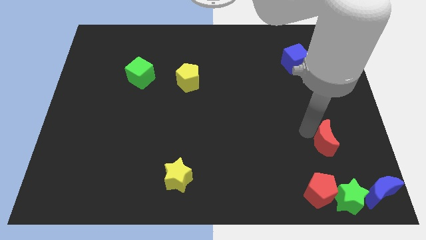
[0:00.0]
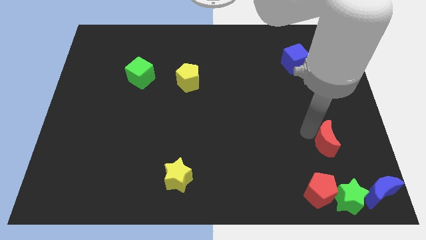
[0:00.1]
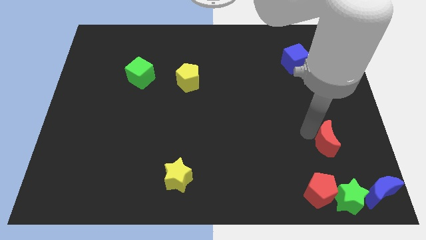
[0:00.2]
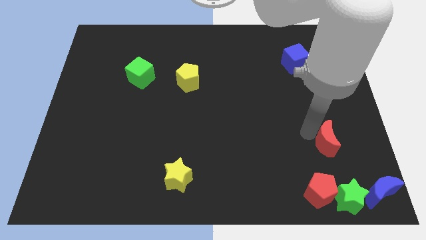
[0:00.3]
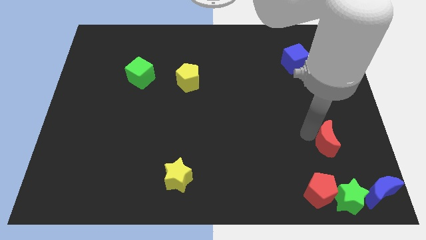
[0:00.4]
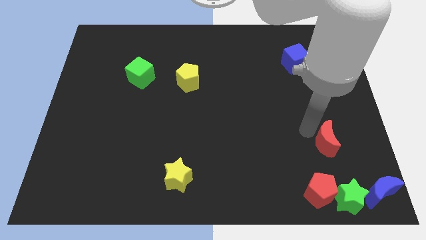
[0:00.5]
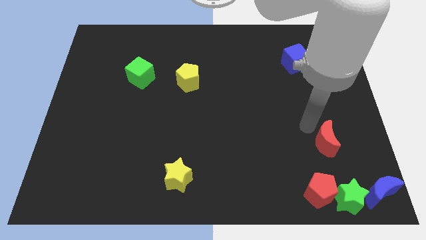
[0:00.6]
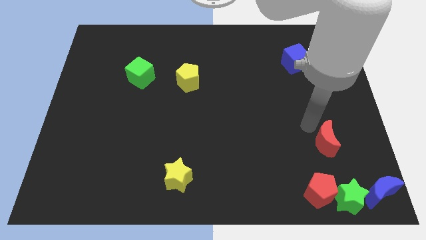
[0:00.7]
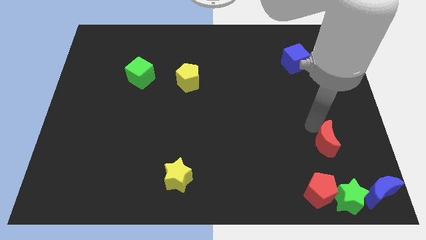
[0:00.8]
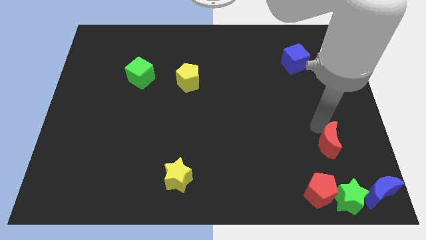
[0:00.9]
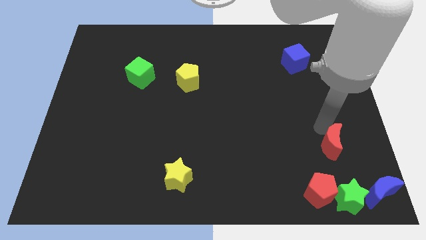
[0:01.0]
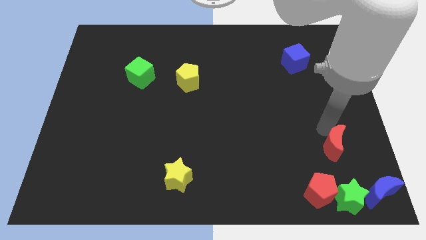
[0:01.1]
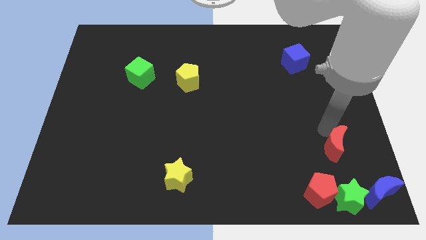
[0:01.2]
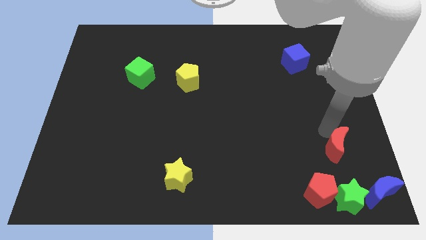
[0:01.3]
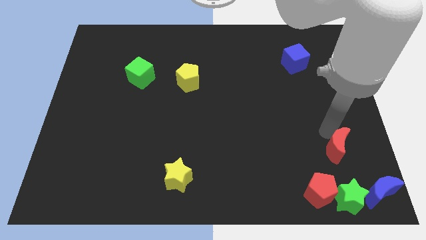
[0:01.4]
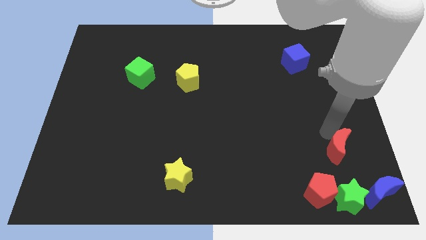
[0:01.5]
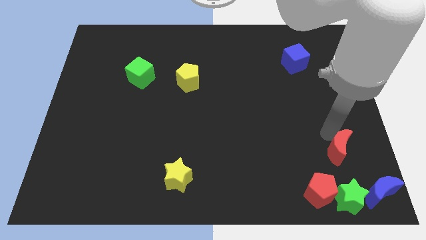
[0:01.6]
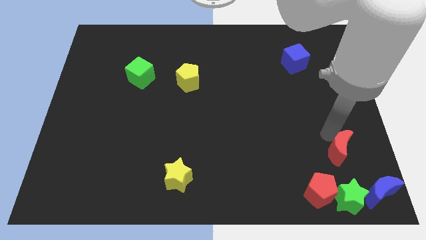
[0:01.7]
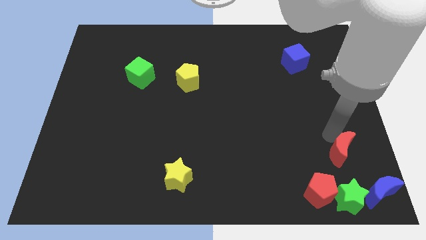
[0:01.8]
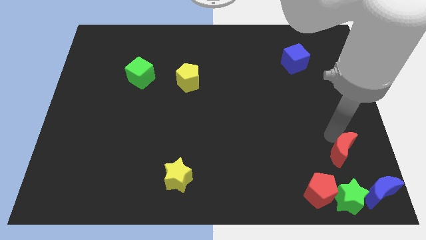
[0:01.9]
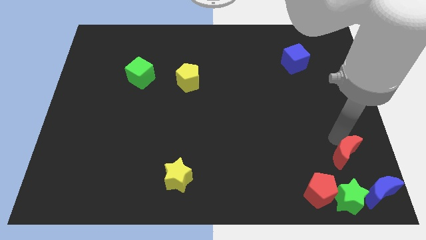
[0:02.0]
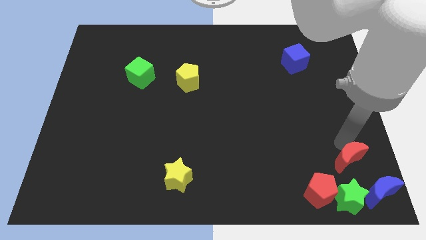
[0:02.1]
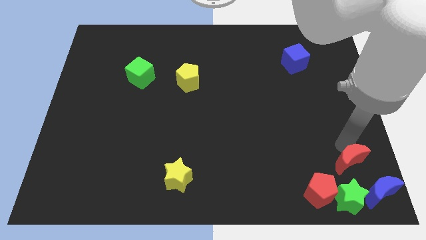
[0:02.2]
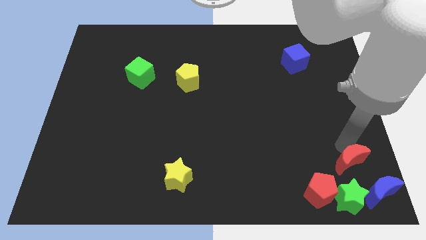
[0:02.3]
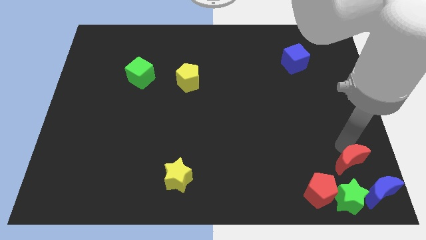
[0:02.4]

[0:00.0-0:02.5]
place the red crescent at the top of the green star

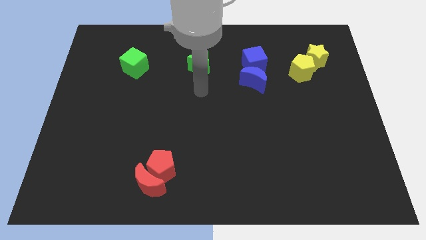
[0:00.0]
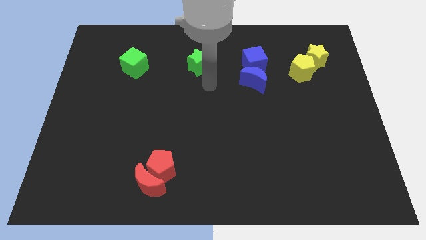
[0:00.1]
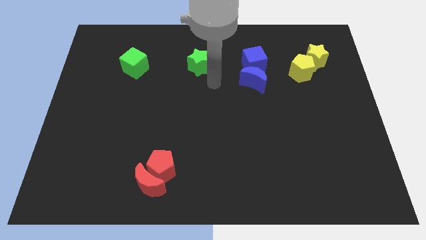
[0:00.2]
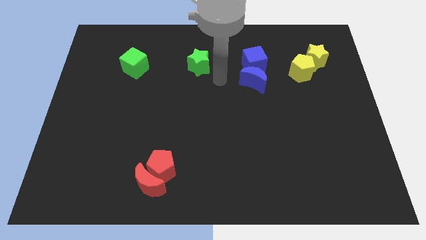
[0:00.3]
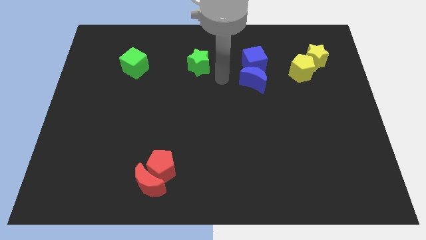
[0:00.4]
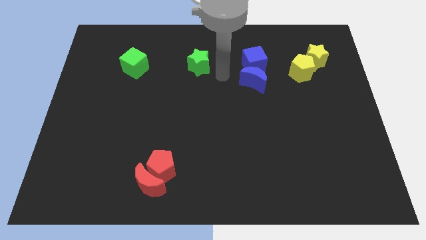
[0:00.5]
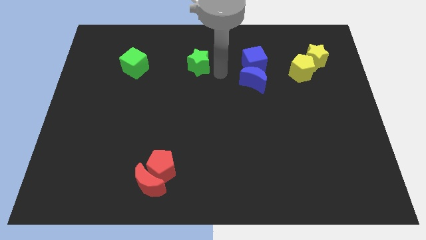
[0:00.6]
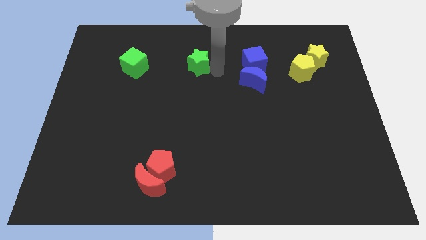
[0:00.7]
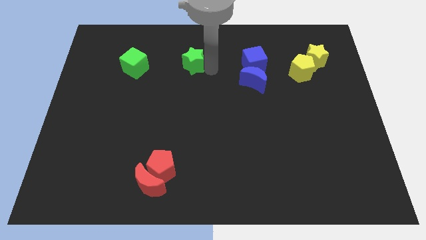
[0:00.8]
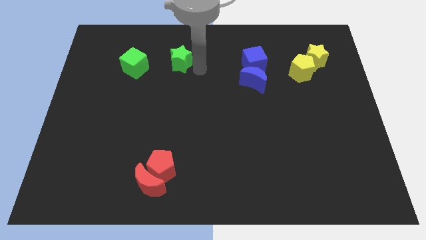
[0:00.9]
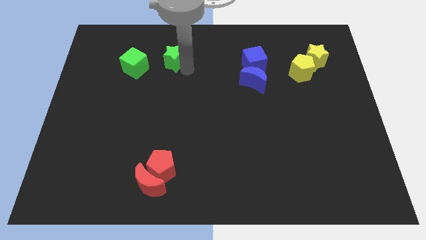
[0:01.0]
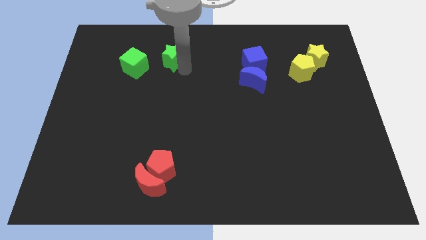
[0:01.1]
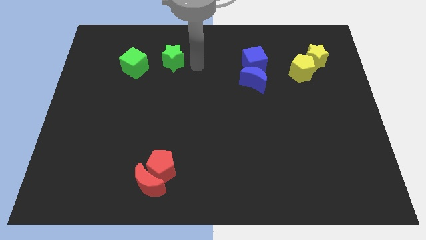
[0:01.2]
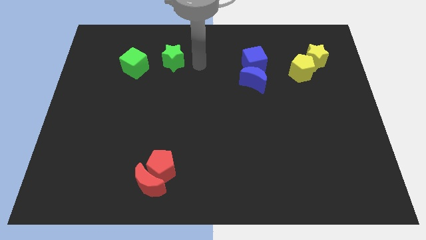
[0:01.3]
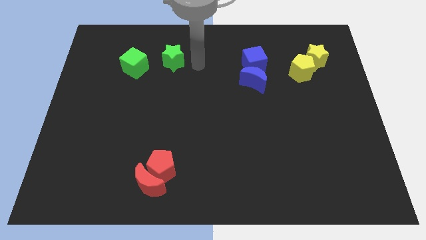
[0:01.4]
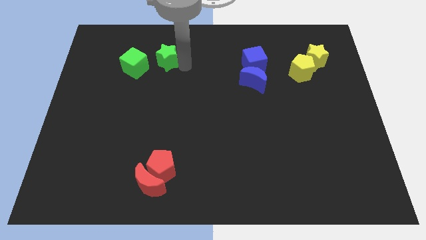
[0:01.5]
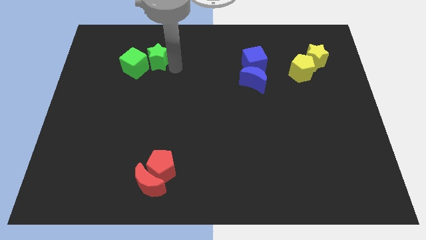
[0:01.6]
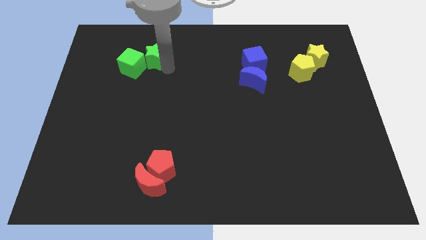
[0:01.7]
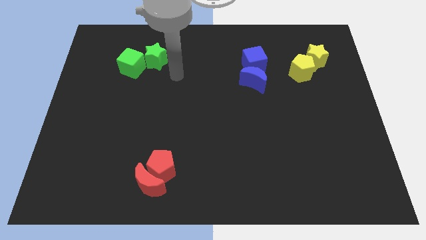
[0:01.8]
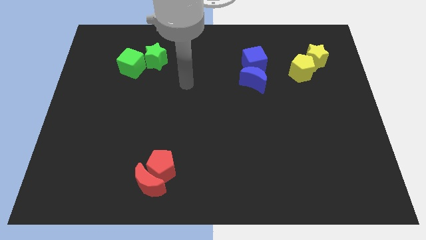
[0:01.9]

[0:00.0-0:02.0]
push the green star into the green cube

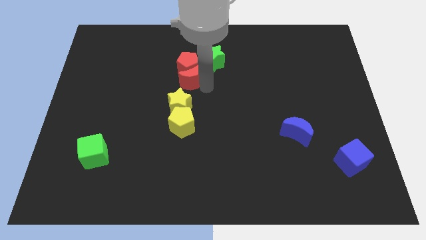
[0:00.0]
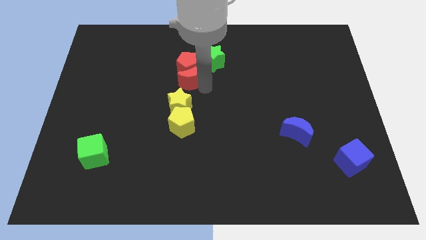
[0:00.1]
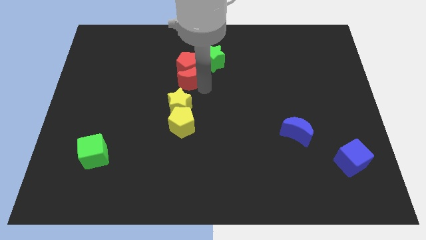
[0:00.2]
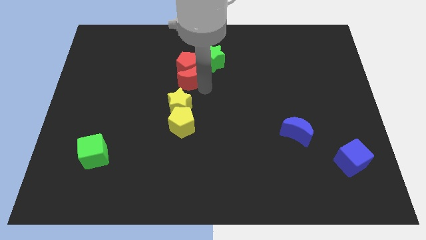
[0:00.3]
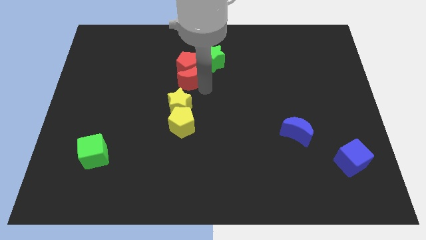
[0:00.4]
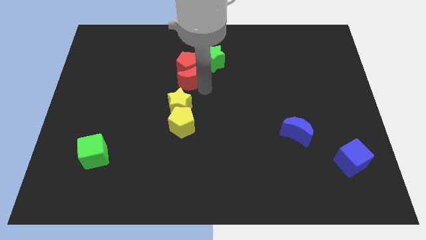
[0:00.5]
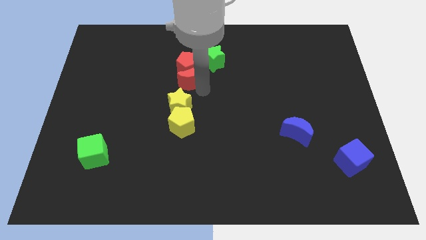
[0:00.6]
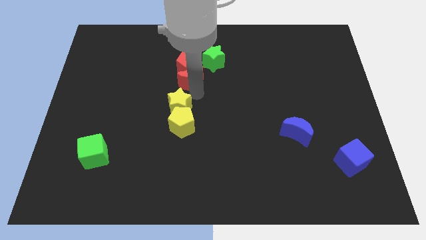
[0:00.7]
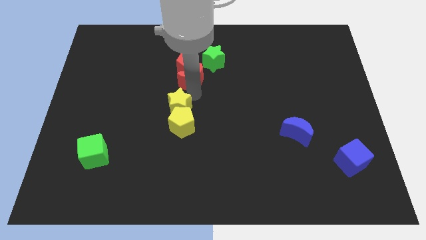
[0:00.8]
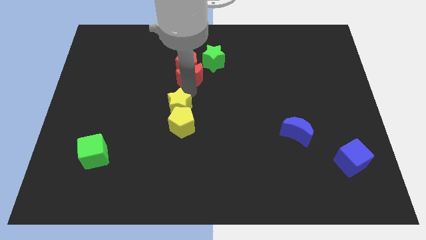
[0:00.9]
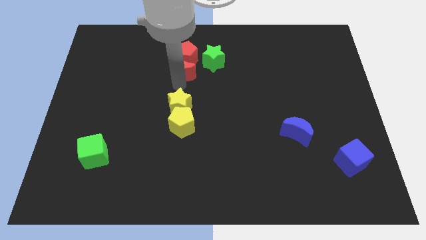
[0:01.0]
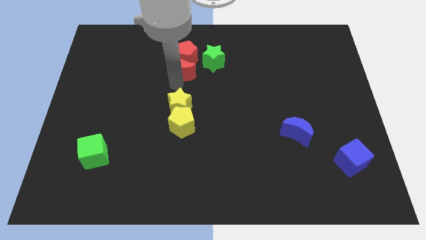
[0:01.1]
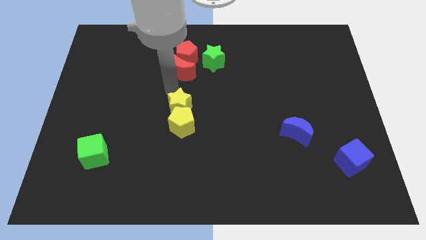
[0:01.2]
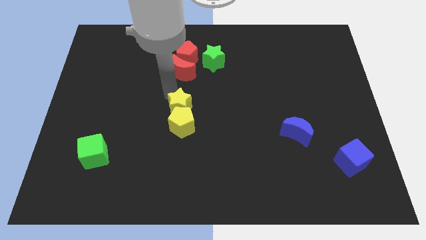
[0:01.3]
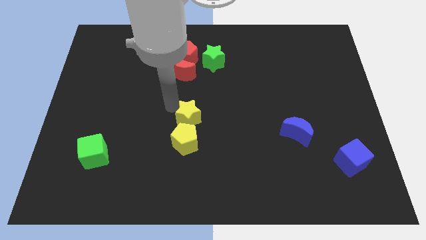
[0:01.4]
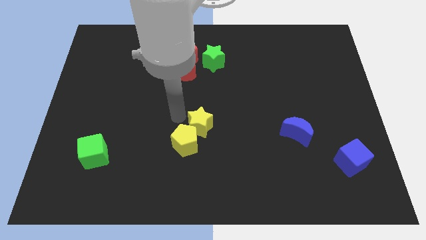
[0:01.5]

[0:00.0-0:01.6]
move the red blocks away from the yellow pentagon

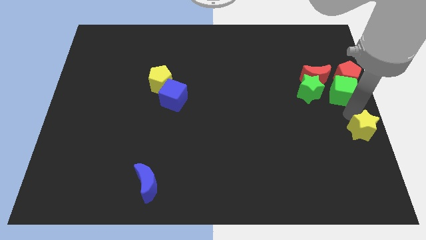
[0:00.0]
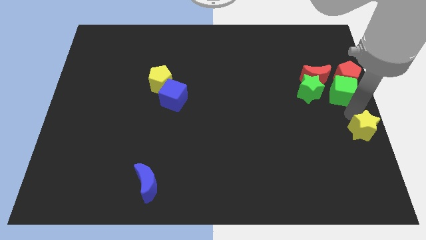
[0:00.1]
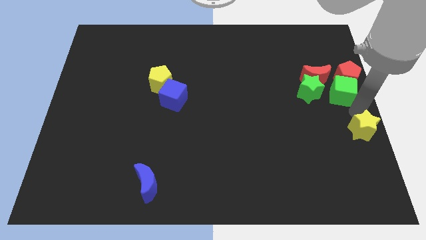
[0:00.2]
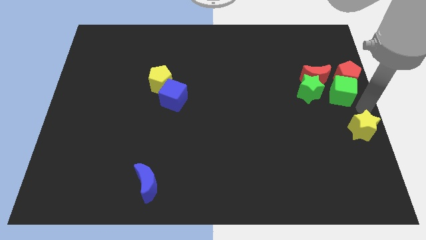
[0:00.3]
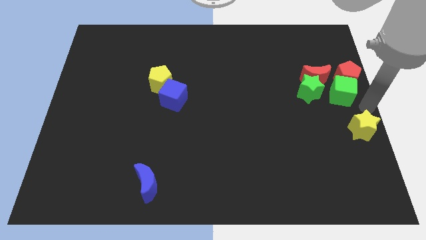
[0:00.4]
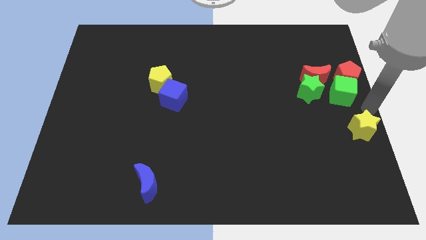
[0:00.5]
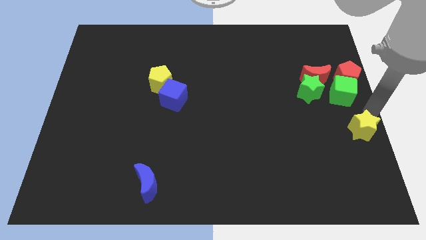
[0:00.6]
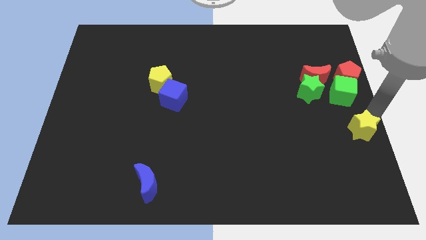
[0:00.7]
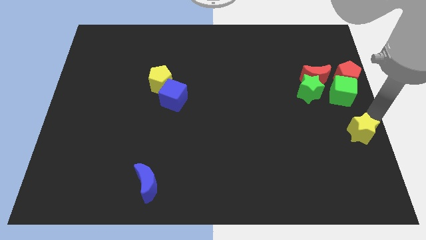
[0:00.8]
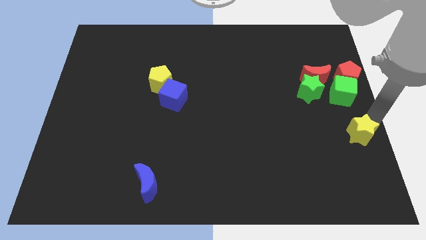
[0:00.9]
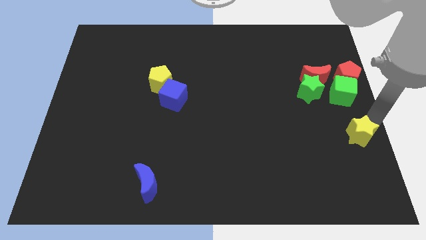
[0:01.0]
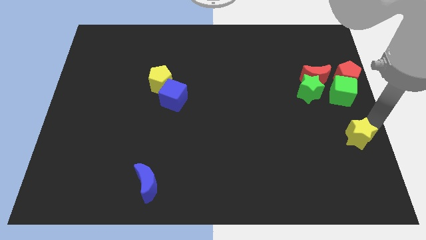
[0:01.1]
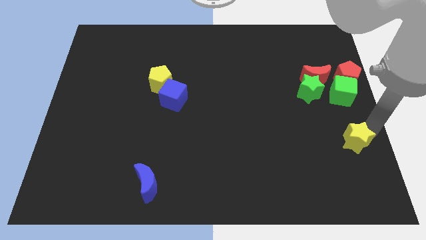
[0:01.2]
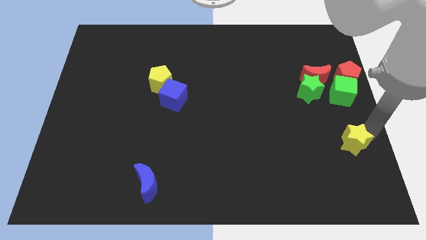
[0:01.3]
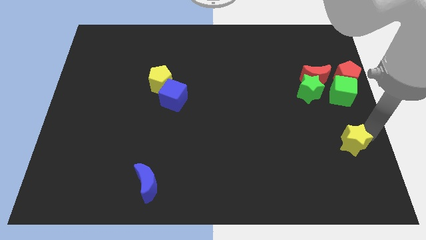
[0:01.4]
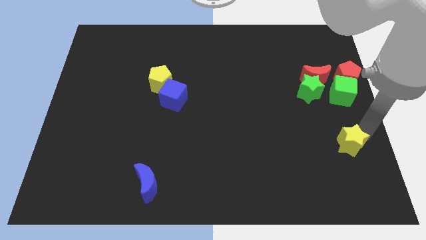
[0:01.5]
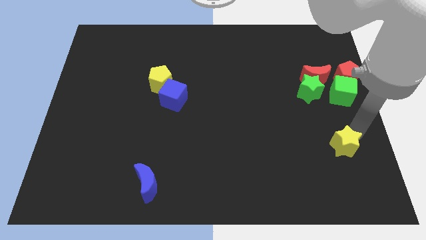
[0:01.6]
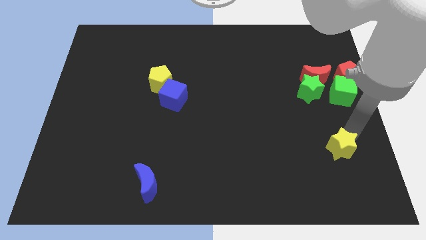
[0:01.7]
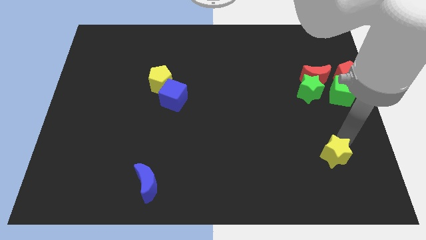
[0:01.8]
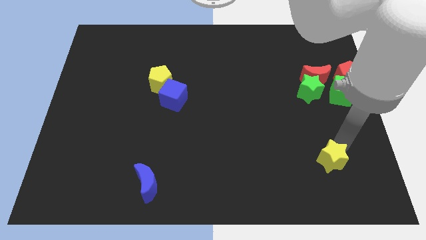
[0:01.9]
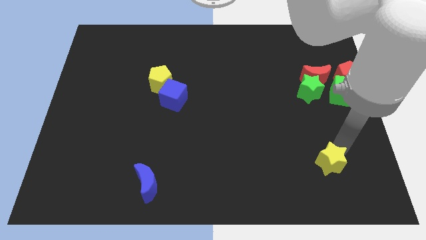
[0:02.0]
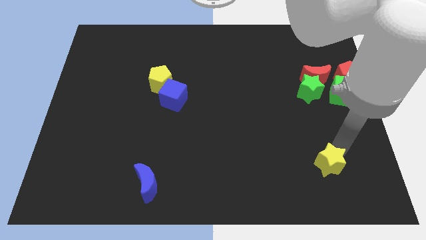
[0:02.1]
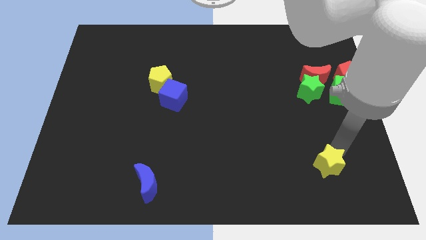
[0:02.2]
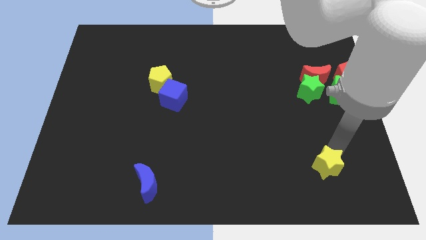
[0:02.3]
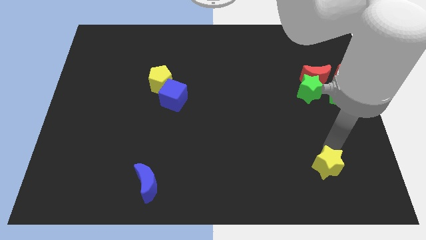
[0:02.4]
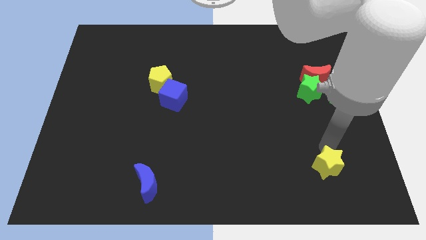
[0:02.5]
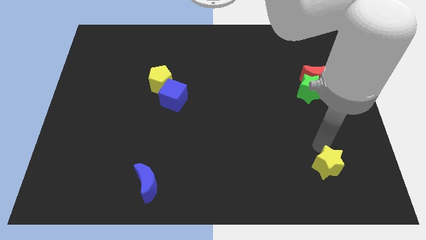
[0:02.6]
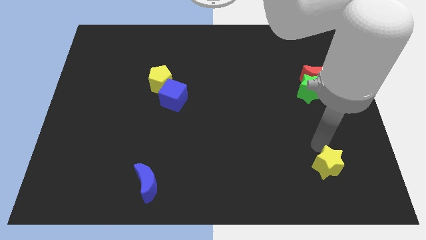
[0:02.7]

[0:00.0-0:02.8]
push the yellow star downwards
